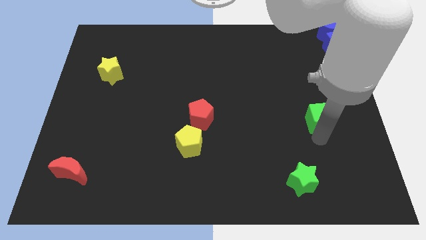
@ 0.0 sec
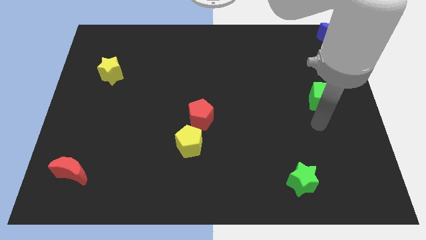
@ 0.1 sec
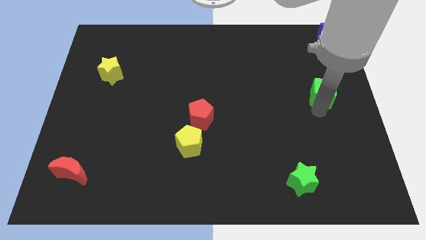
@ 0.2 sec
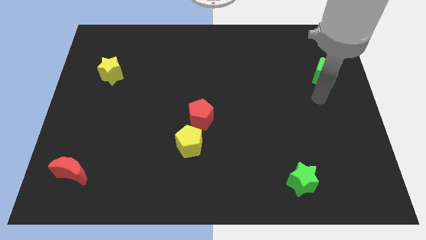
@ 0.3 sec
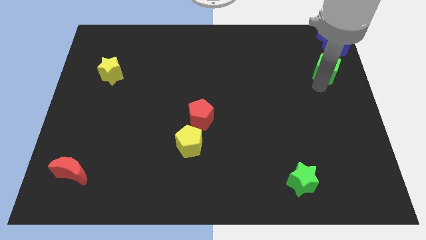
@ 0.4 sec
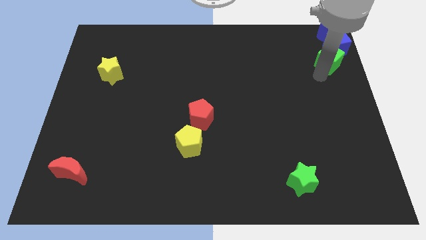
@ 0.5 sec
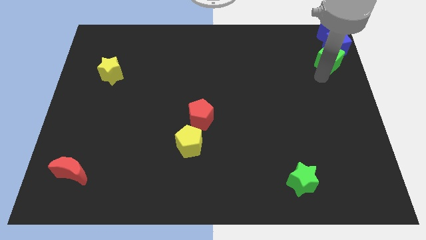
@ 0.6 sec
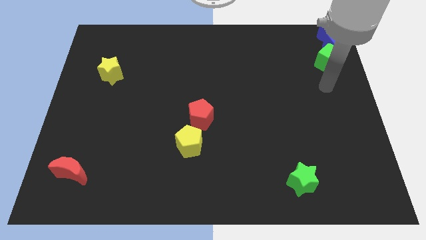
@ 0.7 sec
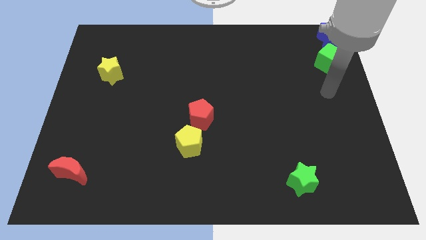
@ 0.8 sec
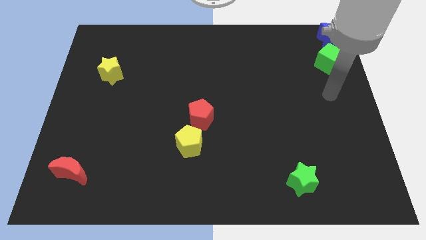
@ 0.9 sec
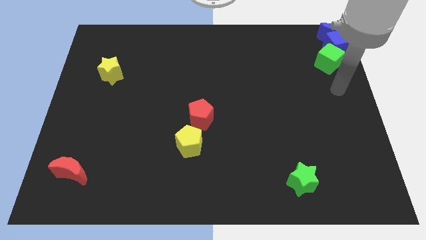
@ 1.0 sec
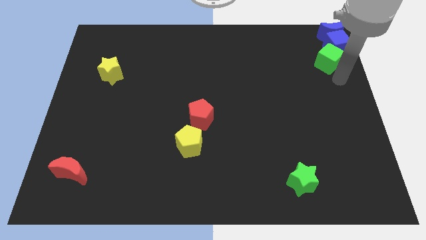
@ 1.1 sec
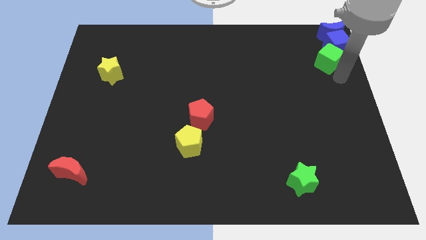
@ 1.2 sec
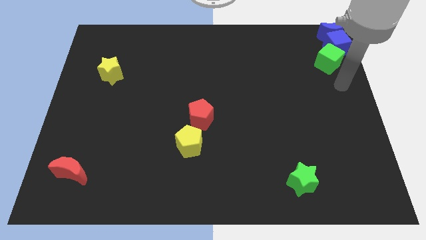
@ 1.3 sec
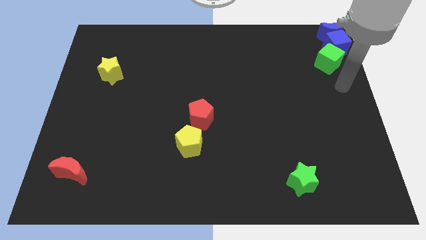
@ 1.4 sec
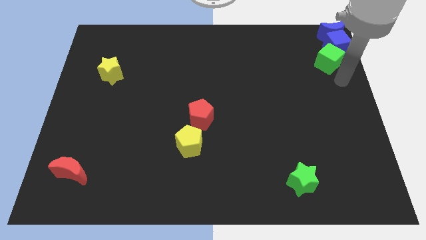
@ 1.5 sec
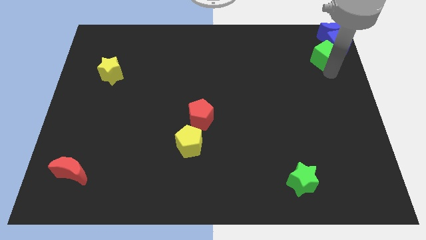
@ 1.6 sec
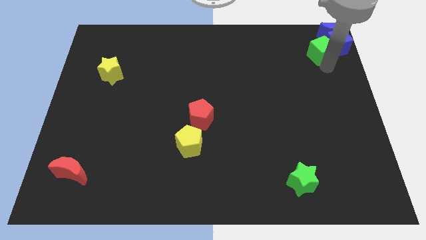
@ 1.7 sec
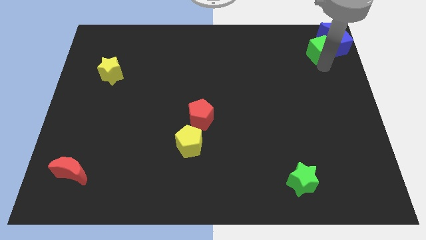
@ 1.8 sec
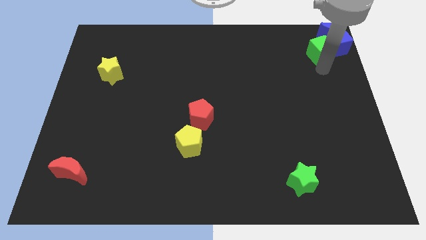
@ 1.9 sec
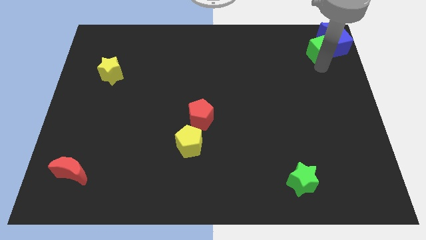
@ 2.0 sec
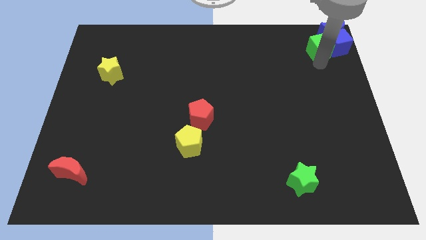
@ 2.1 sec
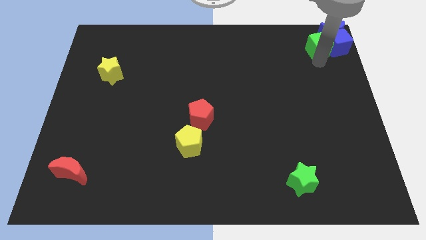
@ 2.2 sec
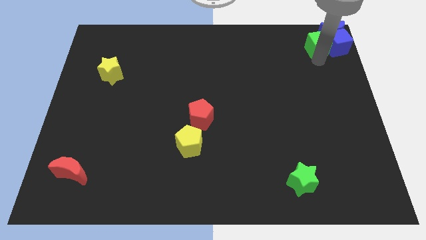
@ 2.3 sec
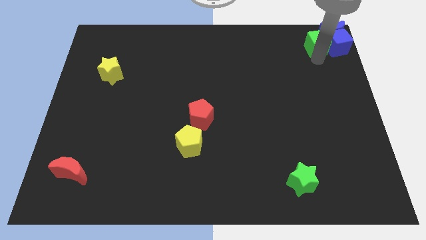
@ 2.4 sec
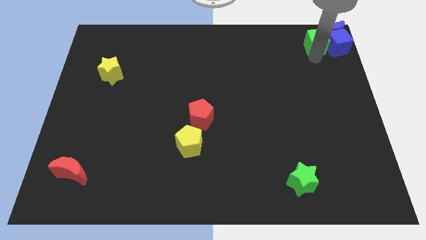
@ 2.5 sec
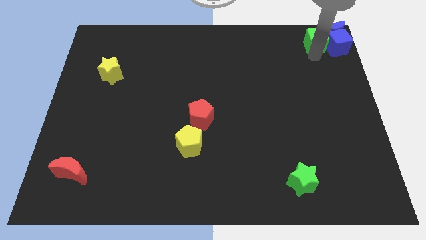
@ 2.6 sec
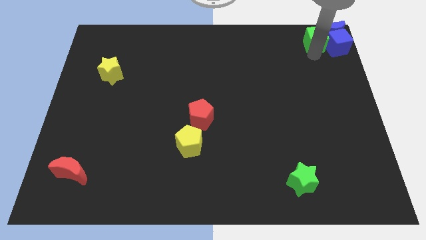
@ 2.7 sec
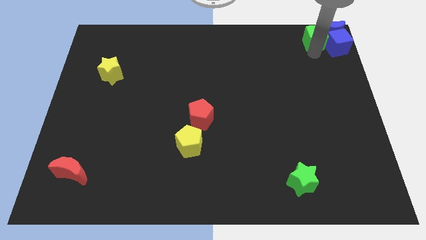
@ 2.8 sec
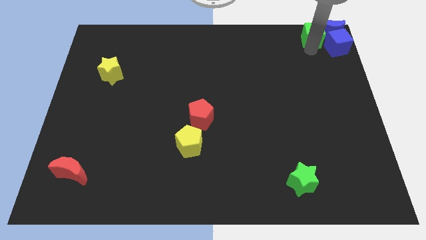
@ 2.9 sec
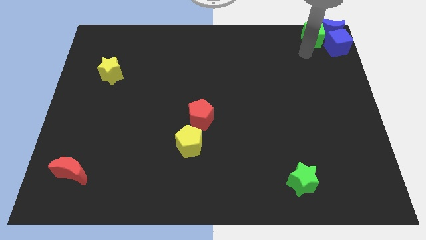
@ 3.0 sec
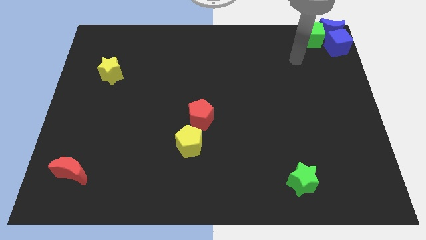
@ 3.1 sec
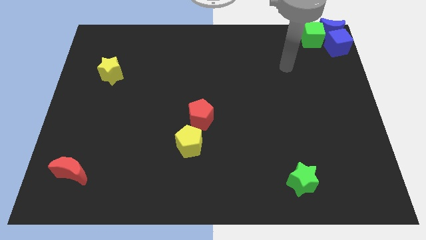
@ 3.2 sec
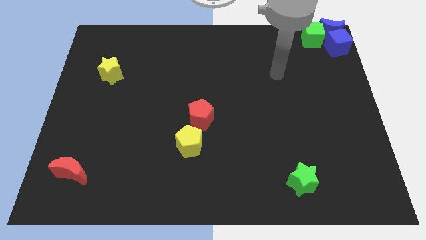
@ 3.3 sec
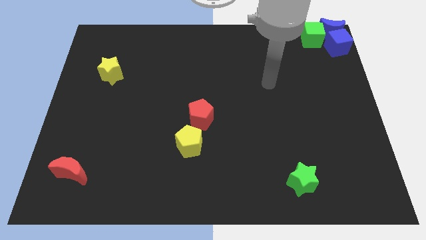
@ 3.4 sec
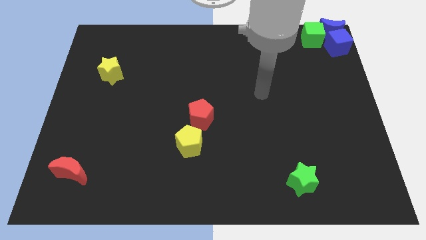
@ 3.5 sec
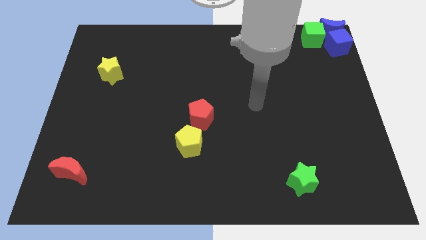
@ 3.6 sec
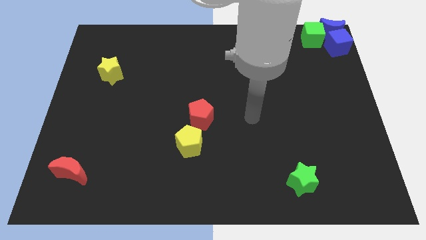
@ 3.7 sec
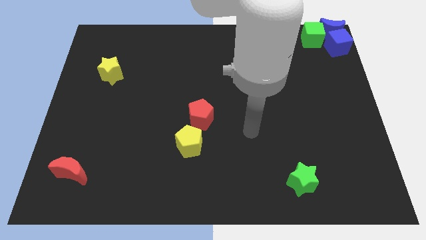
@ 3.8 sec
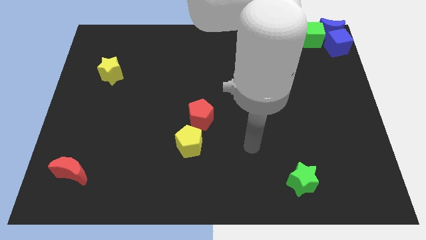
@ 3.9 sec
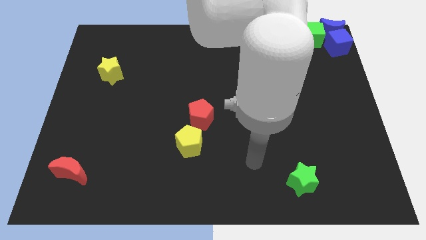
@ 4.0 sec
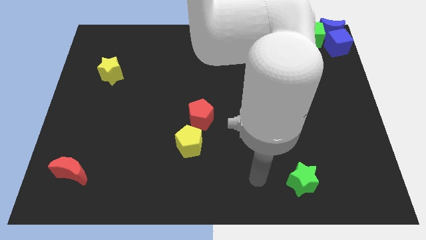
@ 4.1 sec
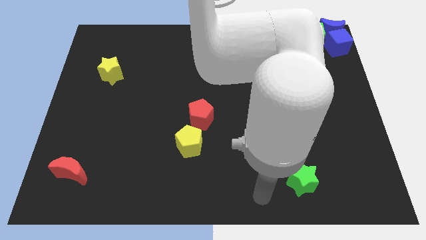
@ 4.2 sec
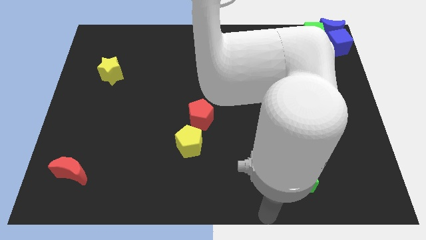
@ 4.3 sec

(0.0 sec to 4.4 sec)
place green cube left to the blue moon

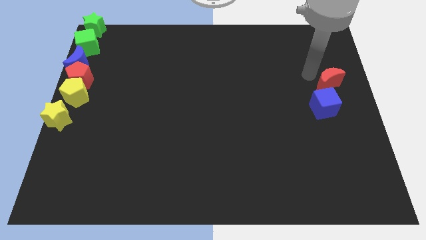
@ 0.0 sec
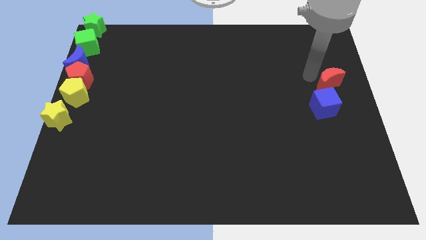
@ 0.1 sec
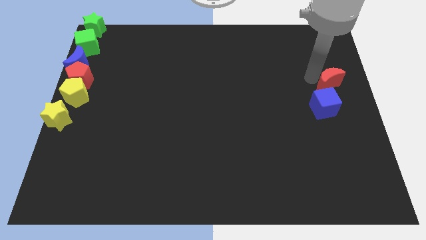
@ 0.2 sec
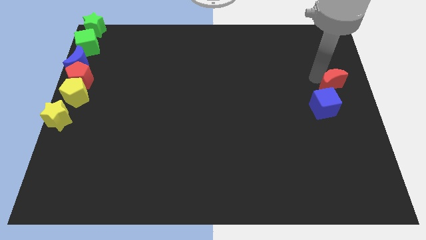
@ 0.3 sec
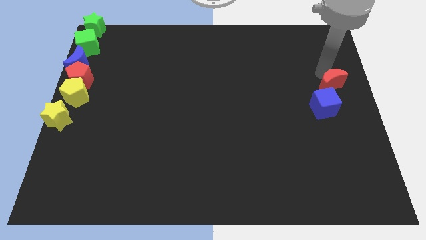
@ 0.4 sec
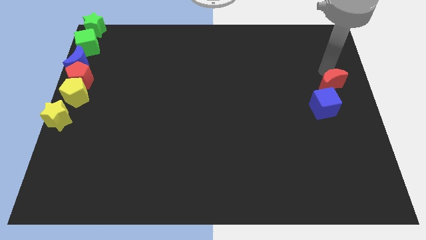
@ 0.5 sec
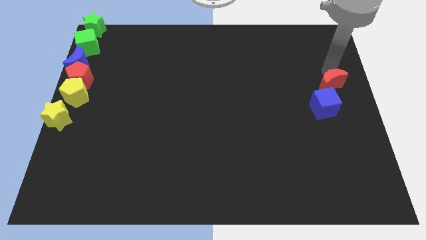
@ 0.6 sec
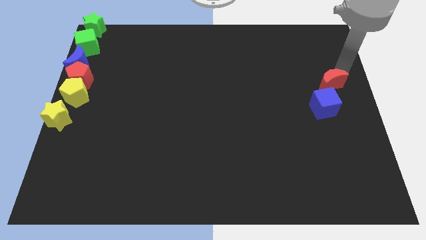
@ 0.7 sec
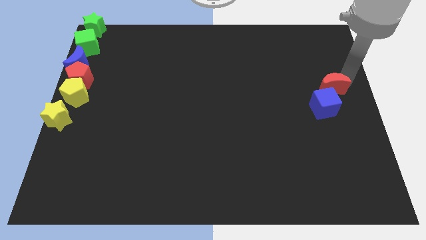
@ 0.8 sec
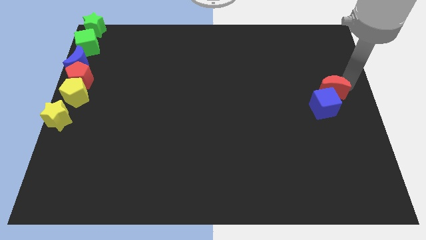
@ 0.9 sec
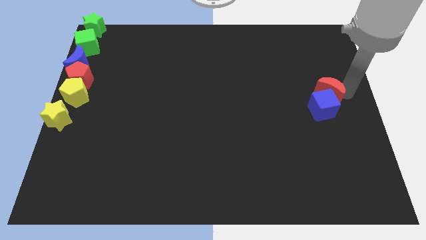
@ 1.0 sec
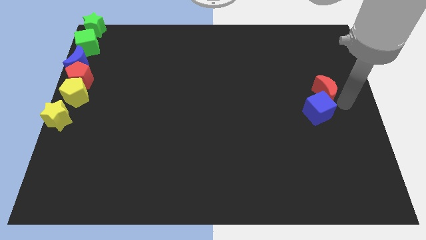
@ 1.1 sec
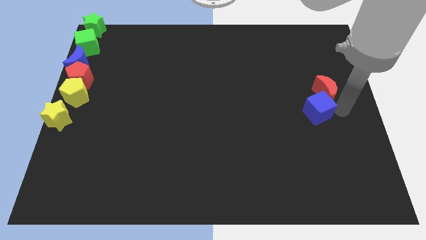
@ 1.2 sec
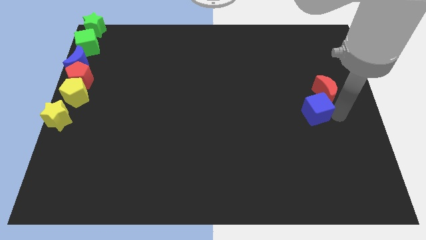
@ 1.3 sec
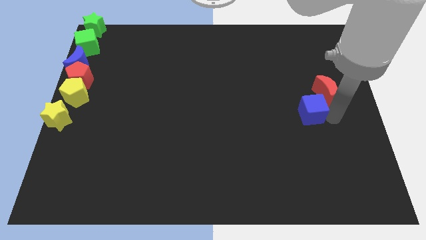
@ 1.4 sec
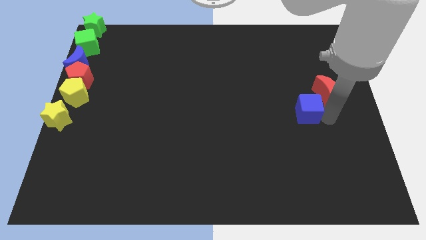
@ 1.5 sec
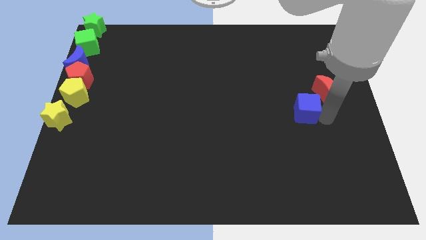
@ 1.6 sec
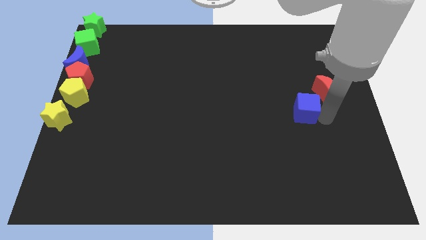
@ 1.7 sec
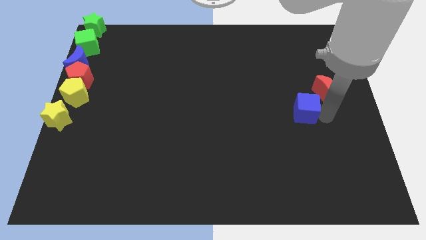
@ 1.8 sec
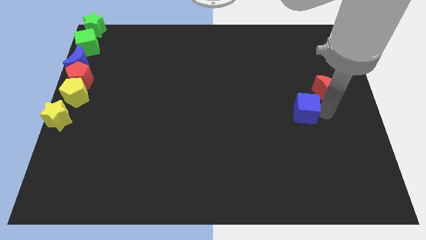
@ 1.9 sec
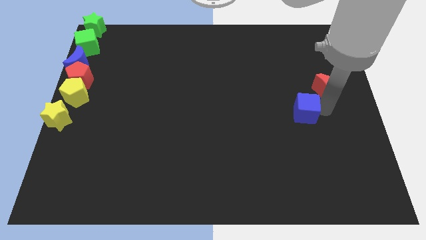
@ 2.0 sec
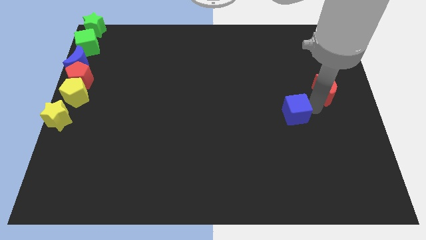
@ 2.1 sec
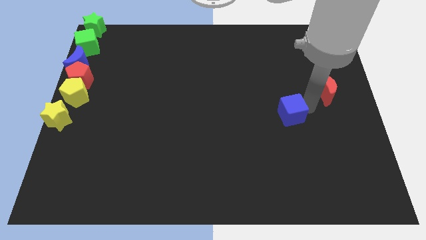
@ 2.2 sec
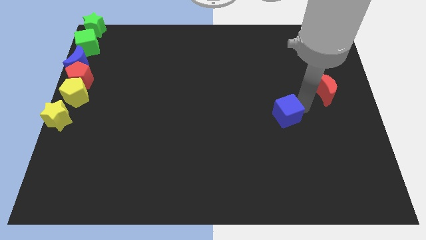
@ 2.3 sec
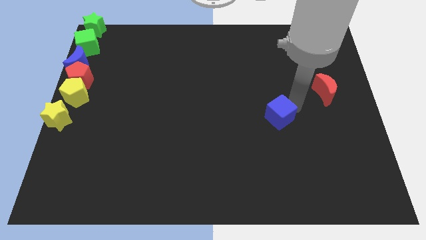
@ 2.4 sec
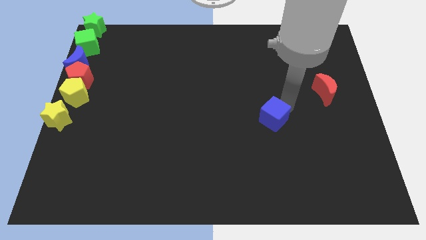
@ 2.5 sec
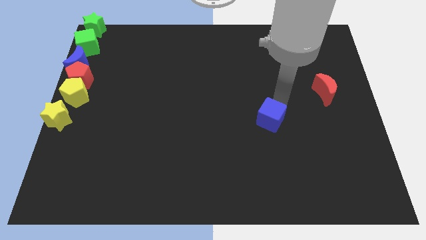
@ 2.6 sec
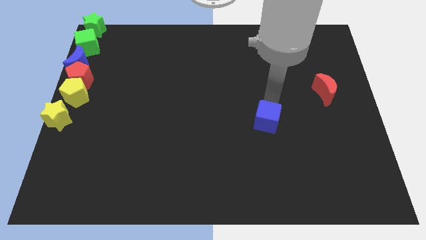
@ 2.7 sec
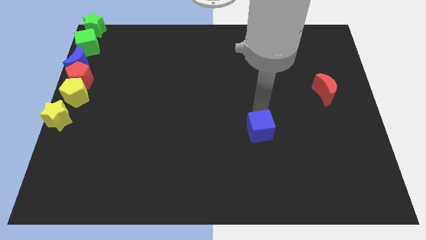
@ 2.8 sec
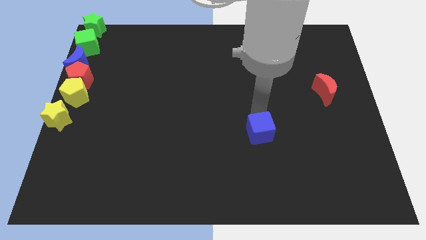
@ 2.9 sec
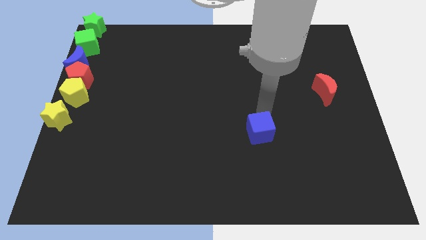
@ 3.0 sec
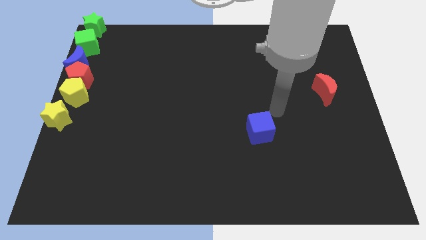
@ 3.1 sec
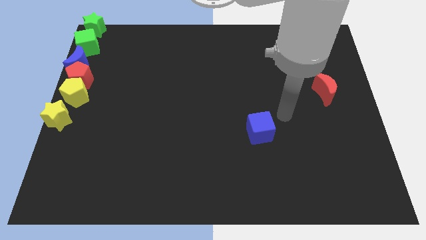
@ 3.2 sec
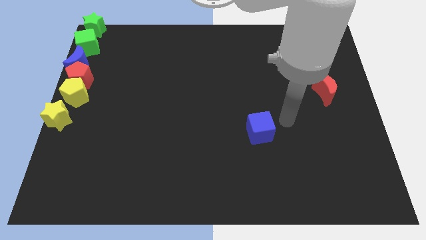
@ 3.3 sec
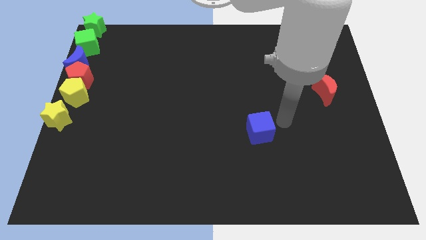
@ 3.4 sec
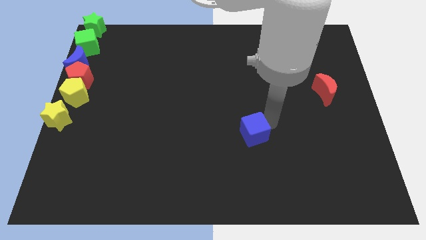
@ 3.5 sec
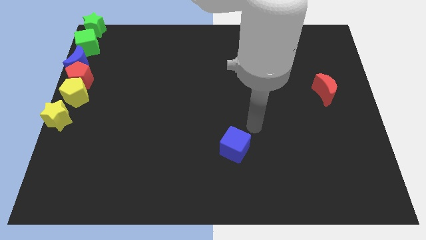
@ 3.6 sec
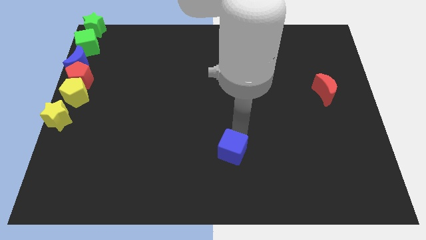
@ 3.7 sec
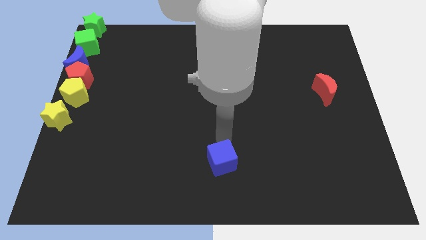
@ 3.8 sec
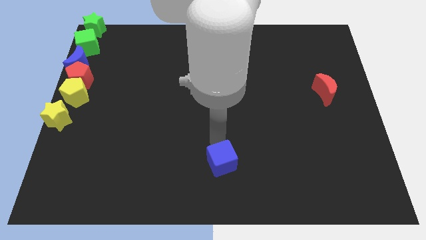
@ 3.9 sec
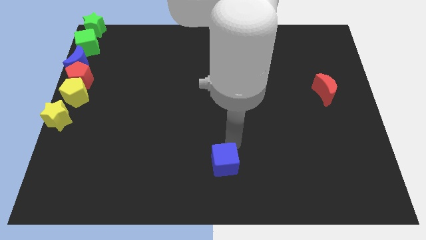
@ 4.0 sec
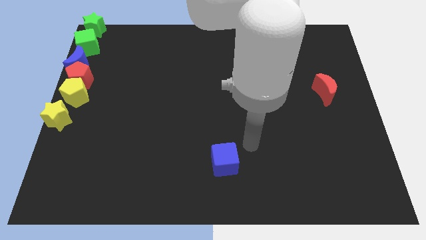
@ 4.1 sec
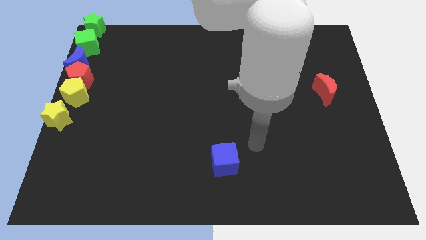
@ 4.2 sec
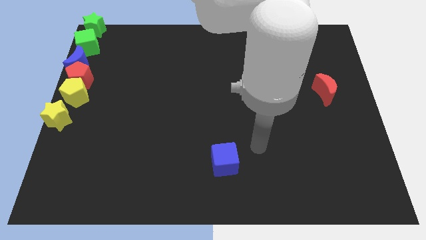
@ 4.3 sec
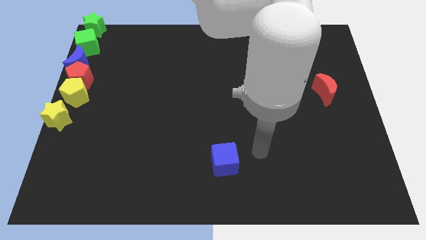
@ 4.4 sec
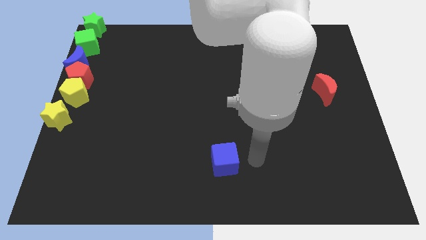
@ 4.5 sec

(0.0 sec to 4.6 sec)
place the blue cube to the bottom middle of the board
